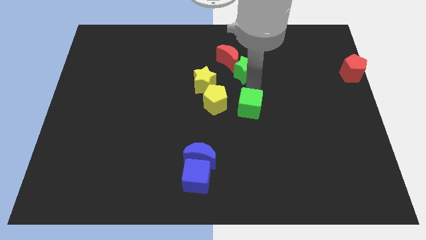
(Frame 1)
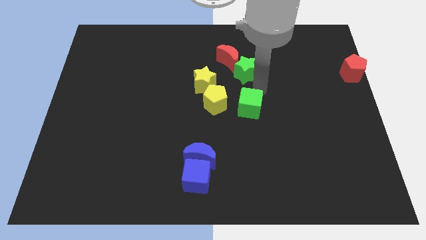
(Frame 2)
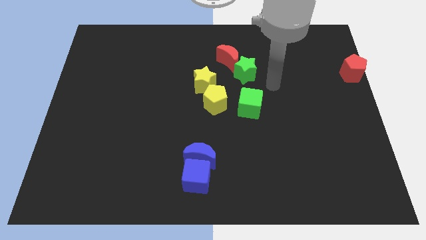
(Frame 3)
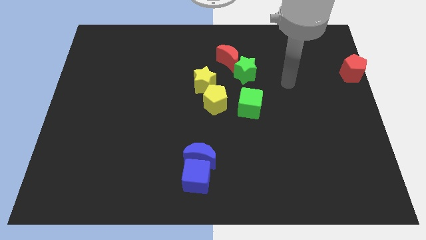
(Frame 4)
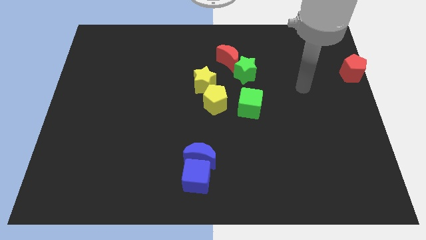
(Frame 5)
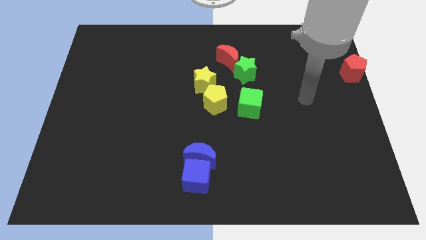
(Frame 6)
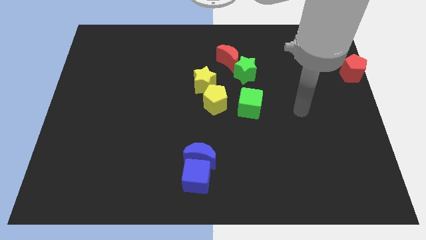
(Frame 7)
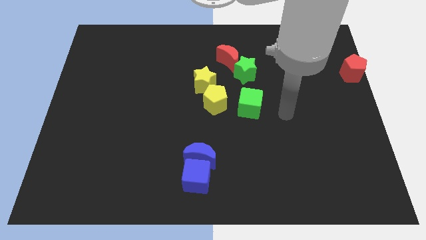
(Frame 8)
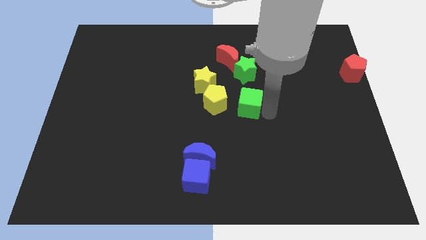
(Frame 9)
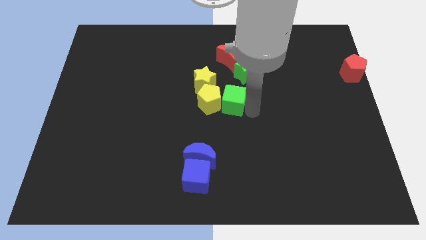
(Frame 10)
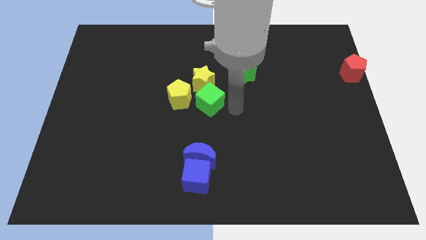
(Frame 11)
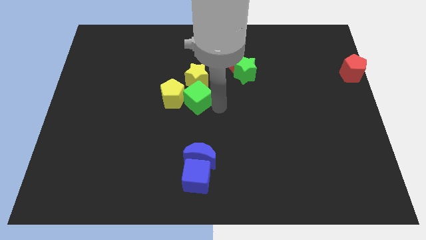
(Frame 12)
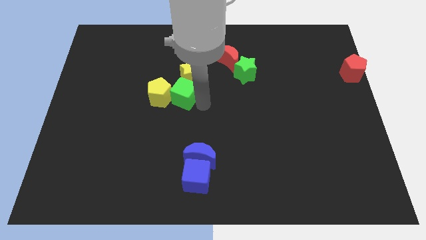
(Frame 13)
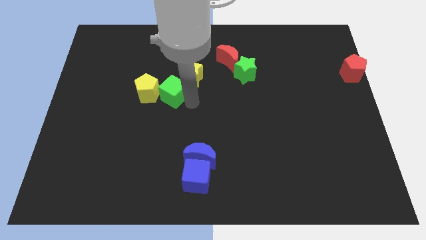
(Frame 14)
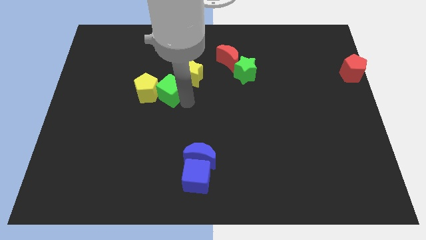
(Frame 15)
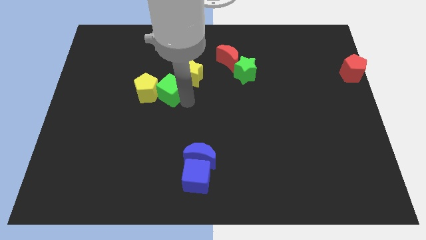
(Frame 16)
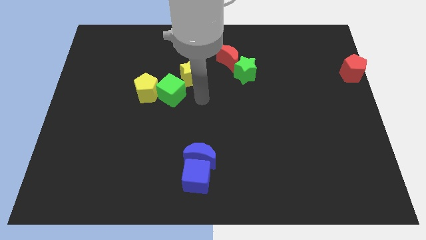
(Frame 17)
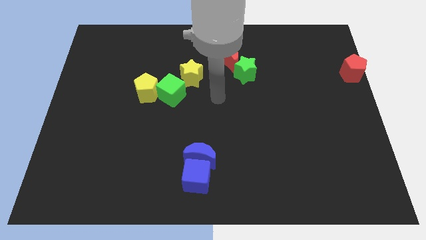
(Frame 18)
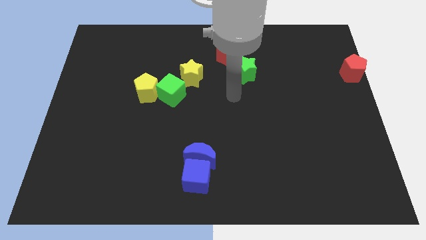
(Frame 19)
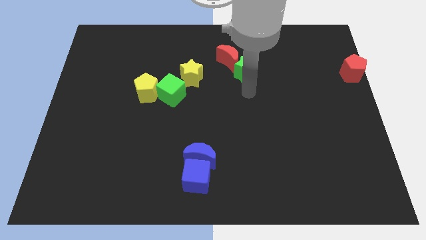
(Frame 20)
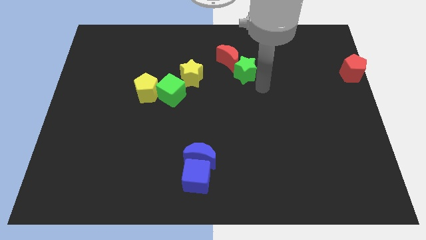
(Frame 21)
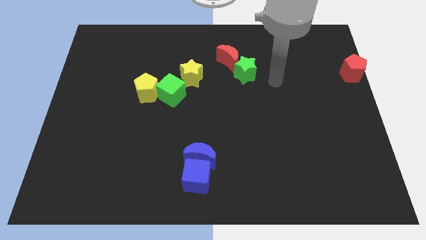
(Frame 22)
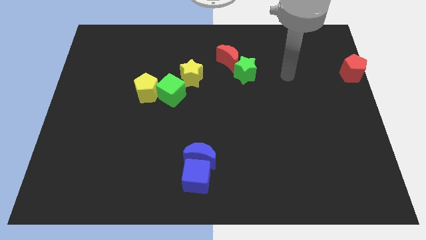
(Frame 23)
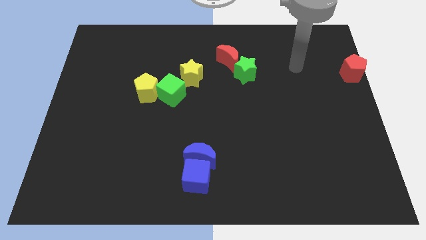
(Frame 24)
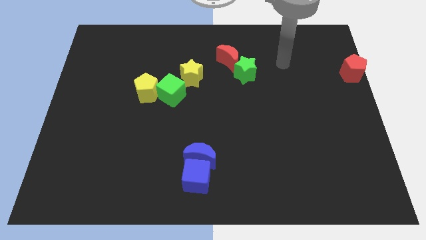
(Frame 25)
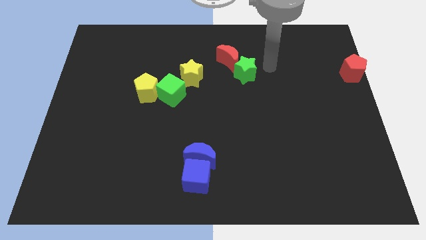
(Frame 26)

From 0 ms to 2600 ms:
push green cube in to yellow pentagon

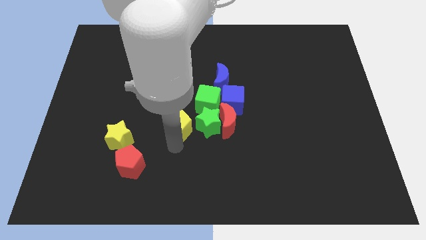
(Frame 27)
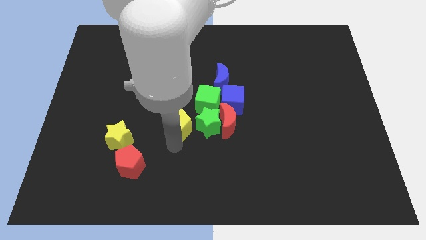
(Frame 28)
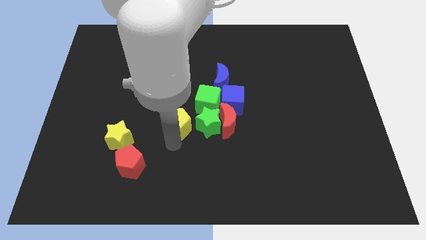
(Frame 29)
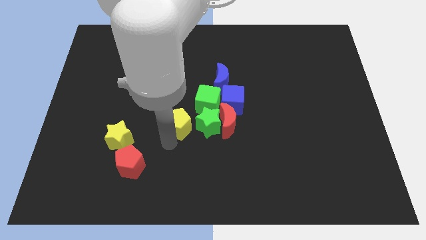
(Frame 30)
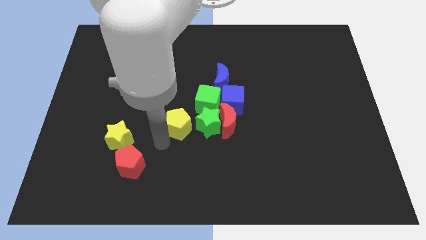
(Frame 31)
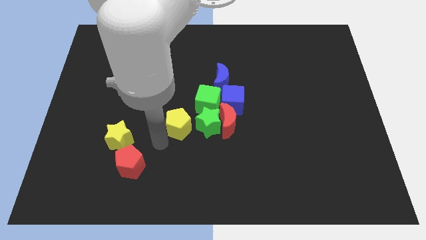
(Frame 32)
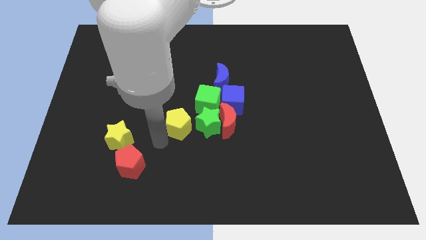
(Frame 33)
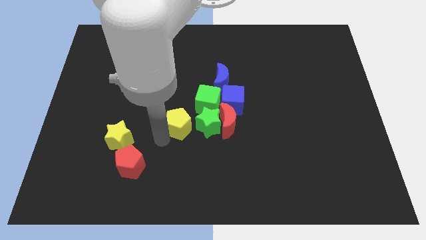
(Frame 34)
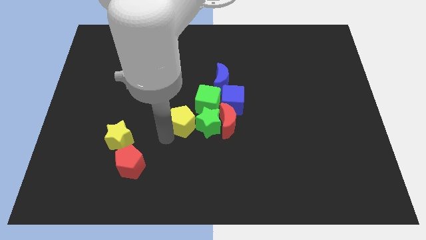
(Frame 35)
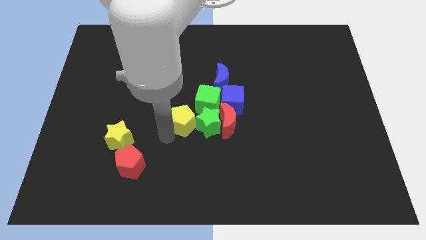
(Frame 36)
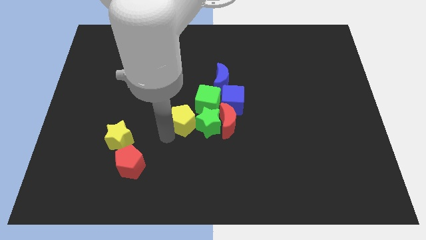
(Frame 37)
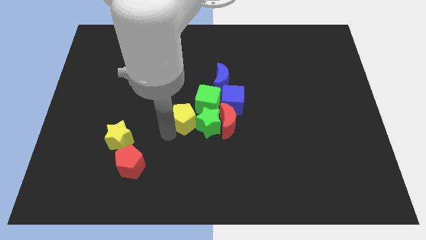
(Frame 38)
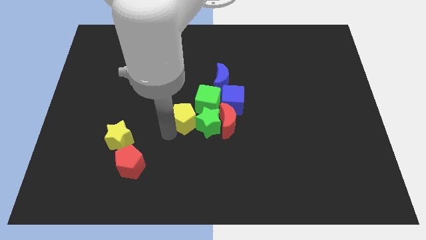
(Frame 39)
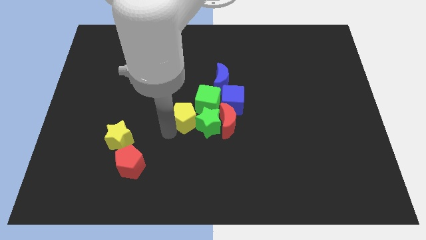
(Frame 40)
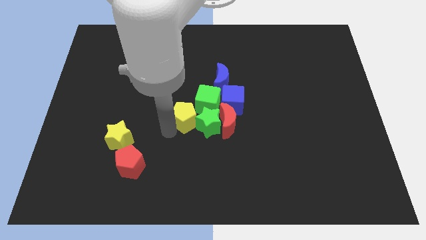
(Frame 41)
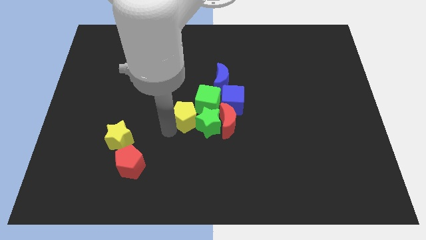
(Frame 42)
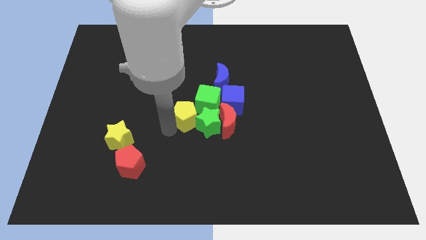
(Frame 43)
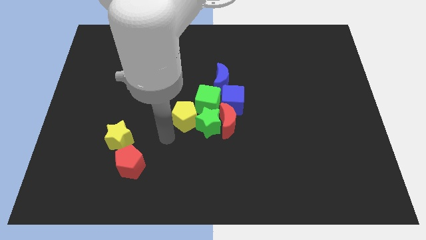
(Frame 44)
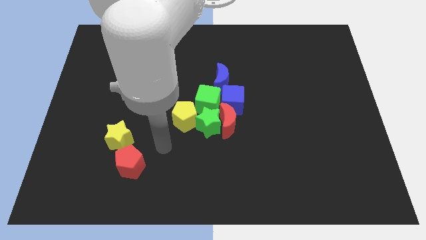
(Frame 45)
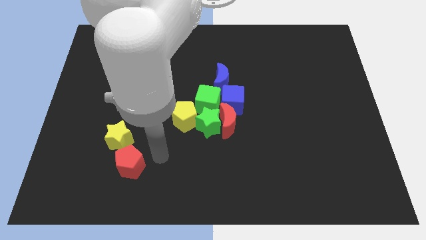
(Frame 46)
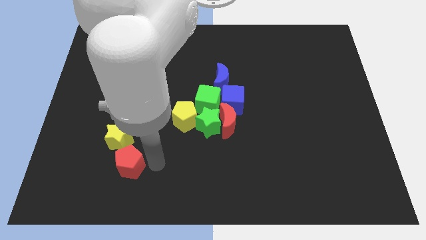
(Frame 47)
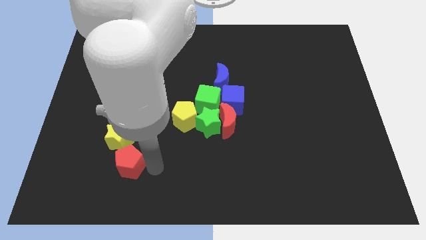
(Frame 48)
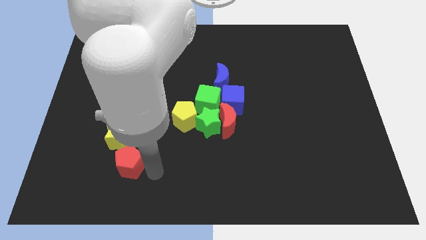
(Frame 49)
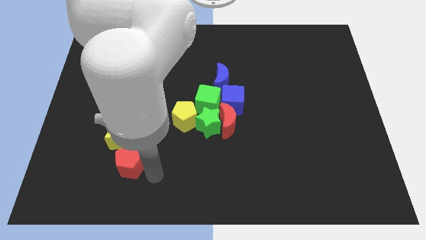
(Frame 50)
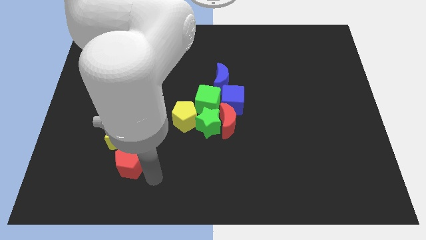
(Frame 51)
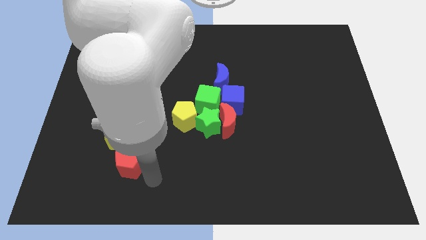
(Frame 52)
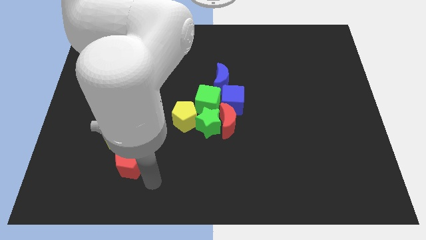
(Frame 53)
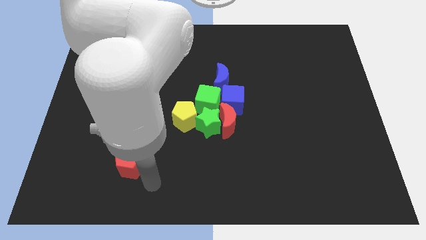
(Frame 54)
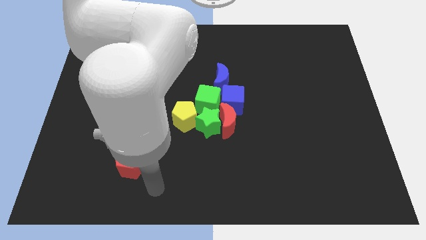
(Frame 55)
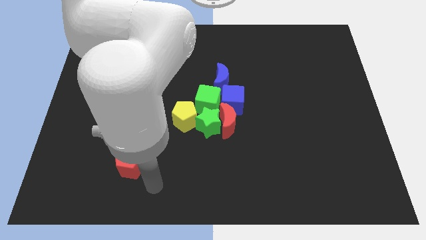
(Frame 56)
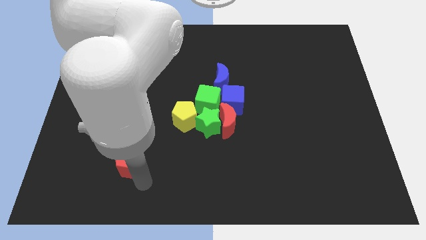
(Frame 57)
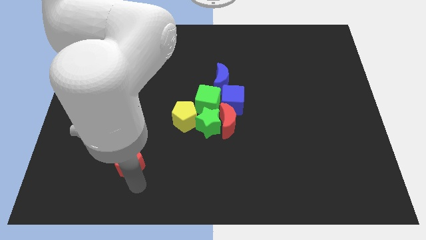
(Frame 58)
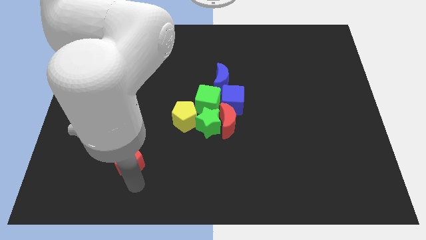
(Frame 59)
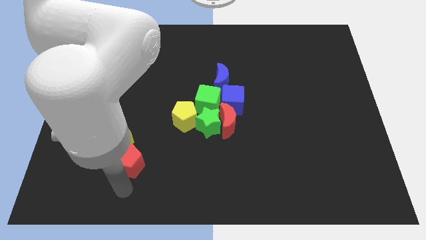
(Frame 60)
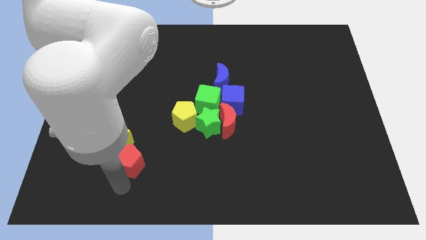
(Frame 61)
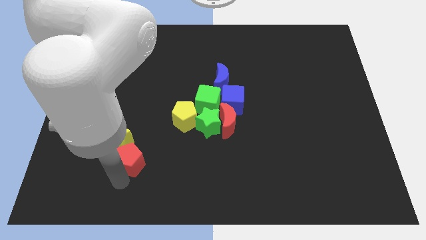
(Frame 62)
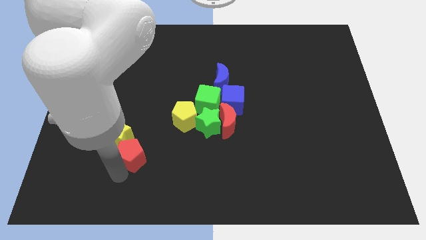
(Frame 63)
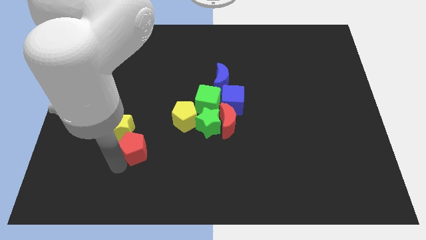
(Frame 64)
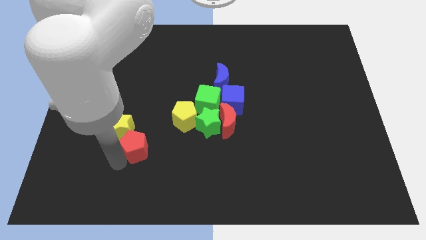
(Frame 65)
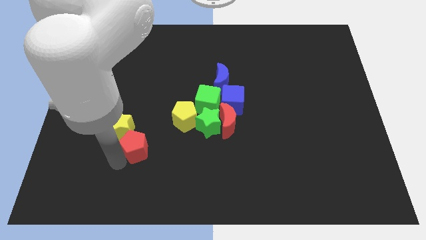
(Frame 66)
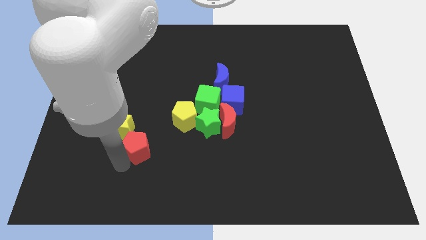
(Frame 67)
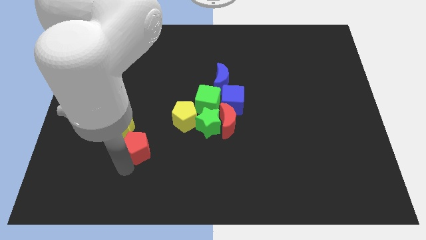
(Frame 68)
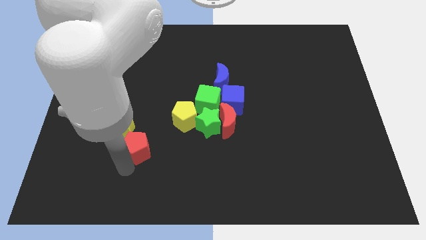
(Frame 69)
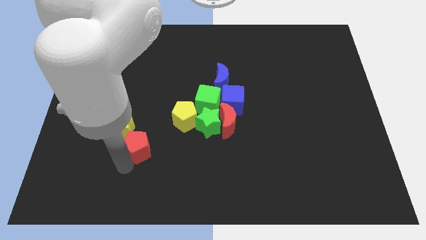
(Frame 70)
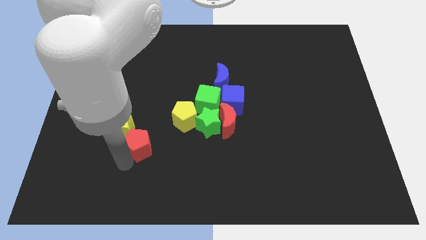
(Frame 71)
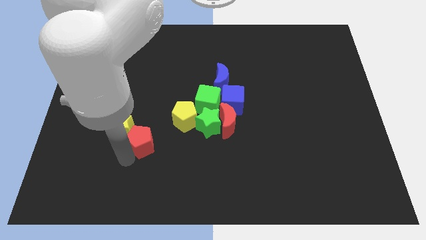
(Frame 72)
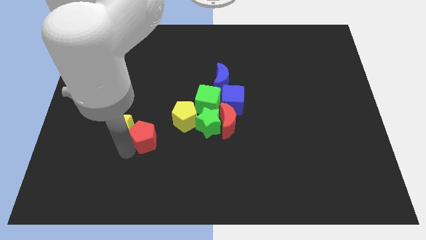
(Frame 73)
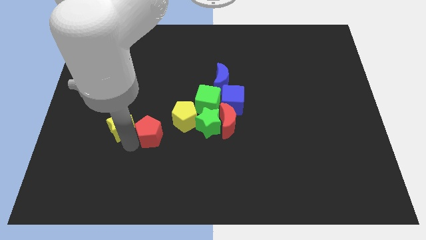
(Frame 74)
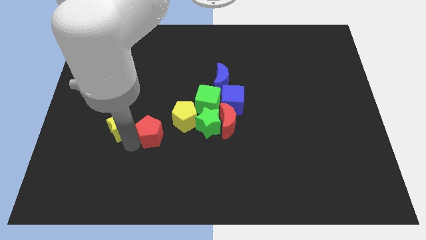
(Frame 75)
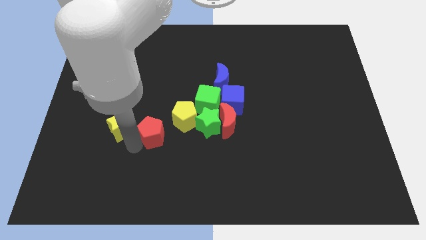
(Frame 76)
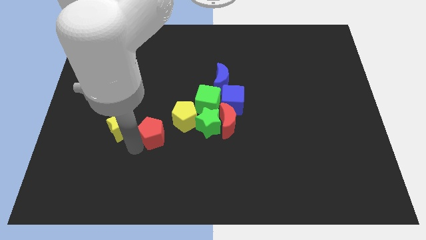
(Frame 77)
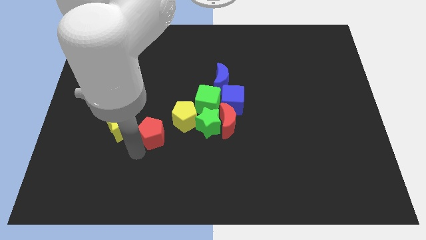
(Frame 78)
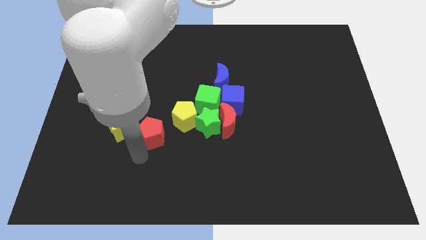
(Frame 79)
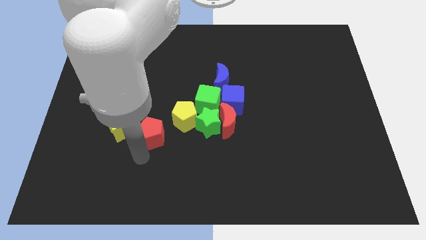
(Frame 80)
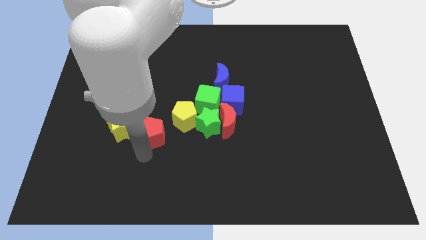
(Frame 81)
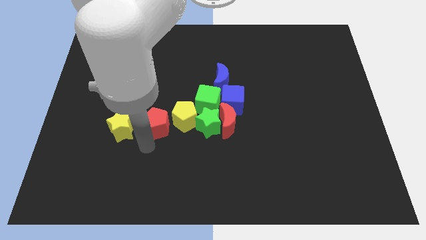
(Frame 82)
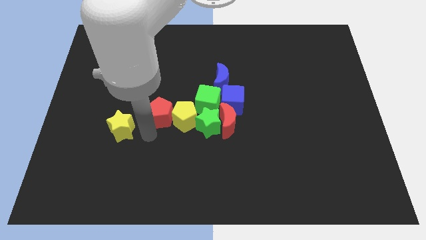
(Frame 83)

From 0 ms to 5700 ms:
move the red pentagon to the left of the yellow pentagon

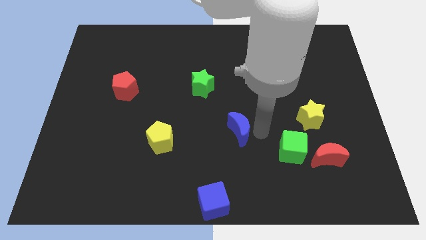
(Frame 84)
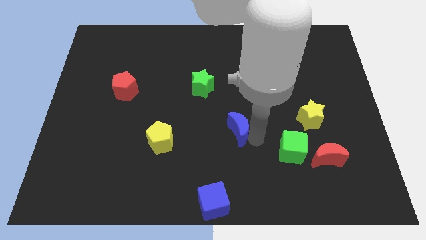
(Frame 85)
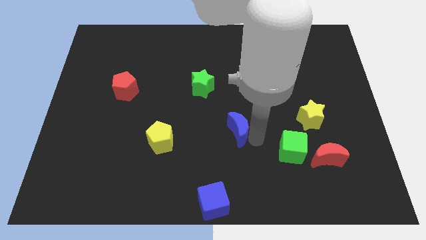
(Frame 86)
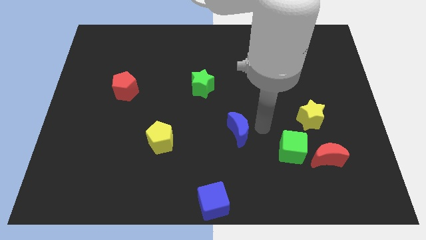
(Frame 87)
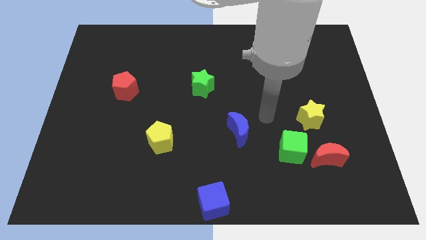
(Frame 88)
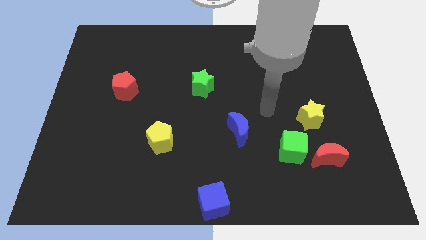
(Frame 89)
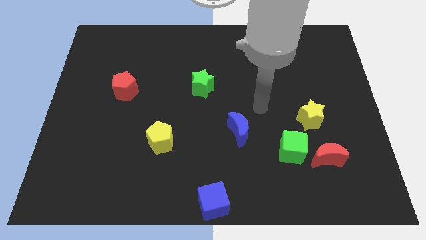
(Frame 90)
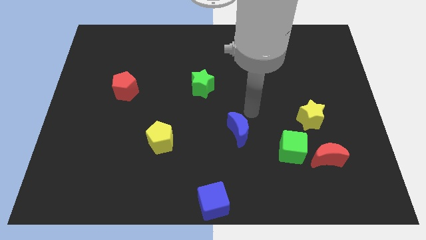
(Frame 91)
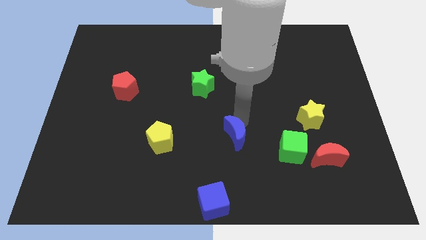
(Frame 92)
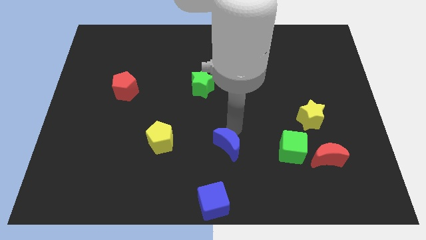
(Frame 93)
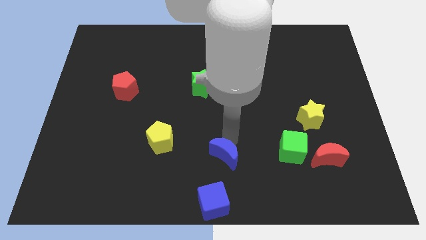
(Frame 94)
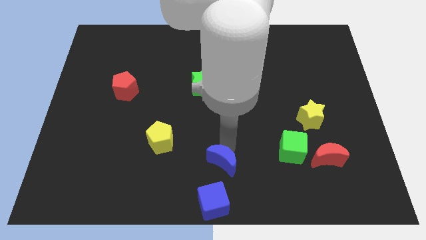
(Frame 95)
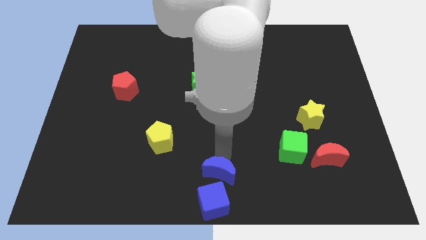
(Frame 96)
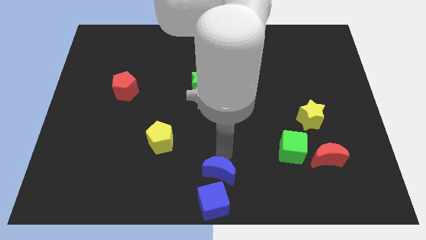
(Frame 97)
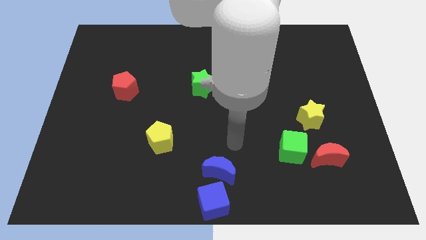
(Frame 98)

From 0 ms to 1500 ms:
place blue crescent to the top of blue cube
